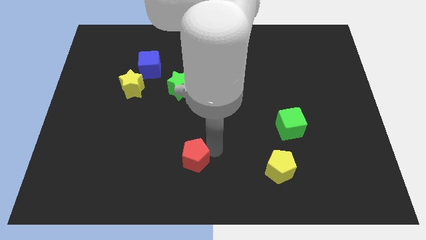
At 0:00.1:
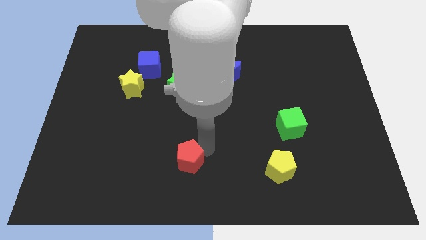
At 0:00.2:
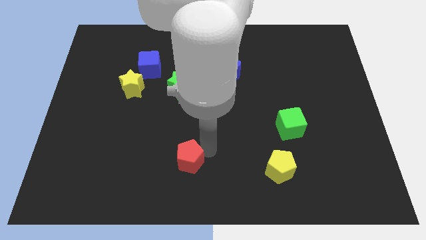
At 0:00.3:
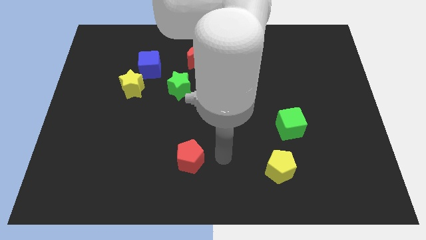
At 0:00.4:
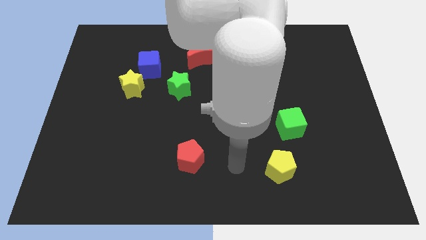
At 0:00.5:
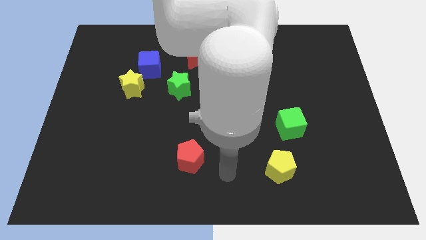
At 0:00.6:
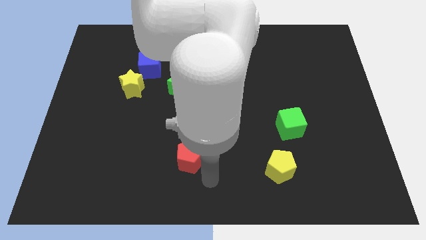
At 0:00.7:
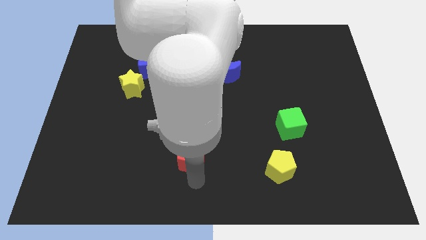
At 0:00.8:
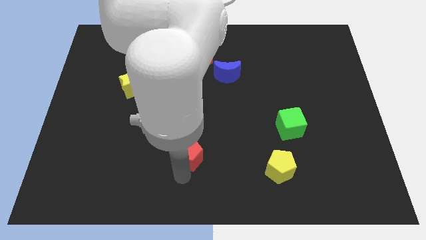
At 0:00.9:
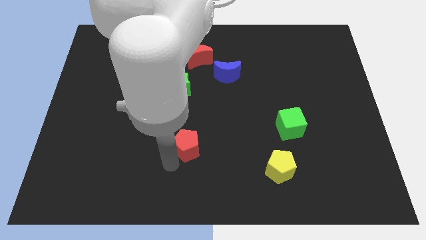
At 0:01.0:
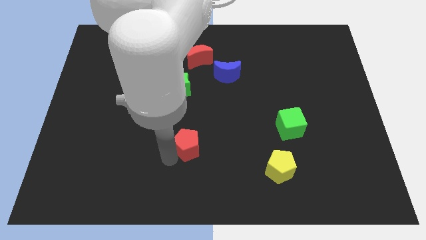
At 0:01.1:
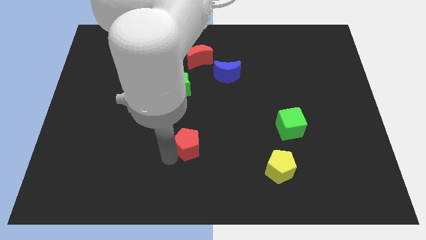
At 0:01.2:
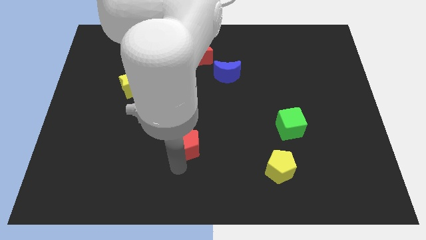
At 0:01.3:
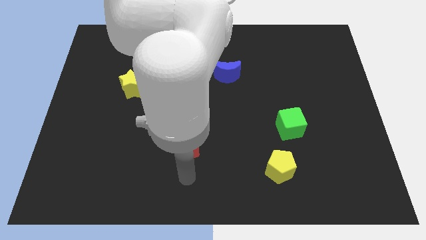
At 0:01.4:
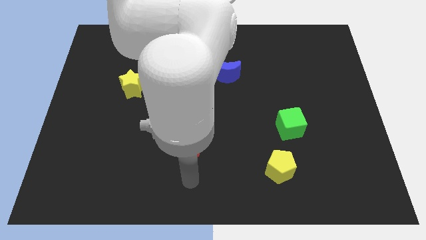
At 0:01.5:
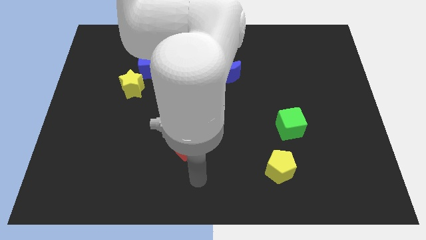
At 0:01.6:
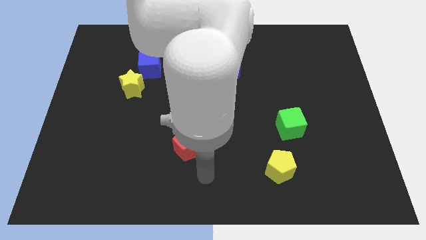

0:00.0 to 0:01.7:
push the red pentagon slightly up

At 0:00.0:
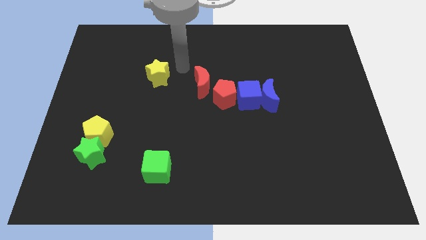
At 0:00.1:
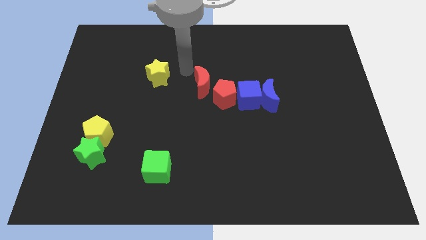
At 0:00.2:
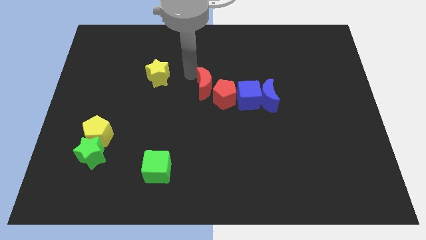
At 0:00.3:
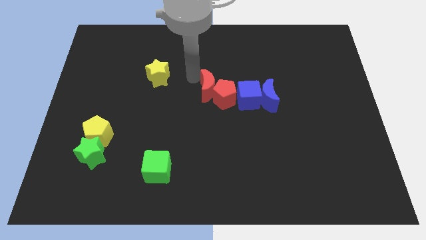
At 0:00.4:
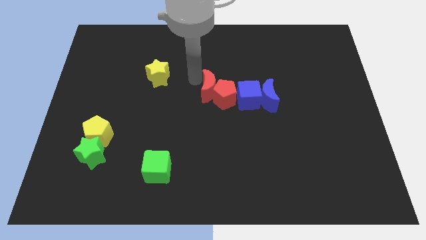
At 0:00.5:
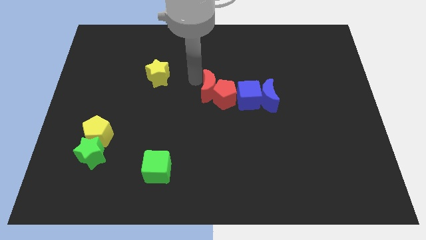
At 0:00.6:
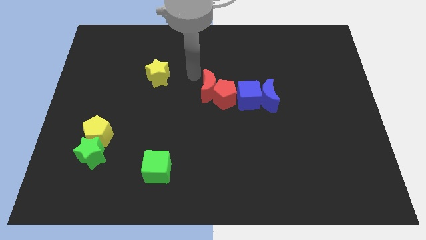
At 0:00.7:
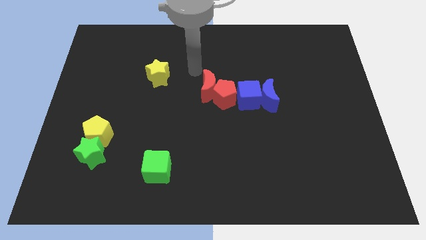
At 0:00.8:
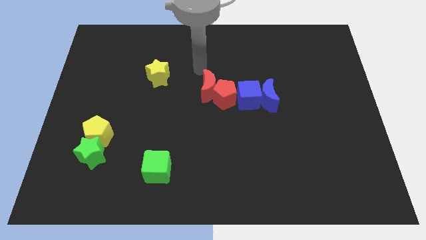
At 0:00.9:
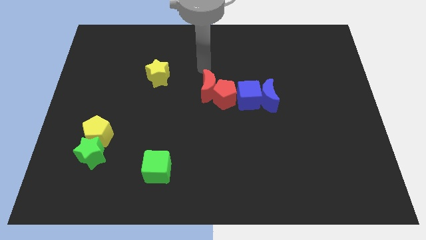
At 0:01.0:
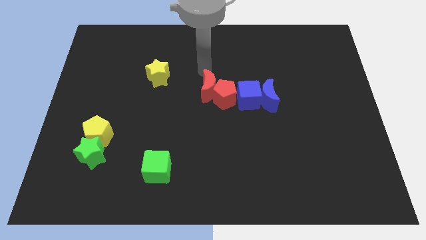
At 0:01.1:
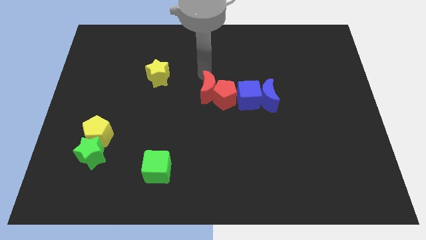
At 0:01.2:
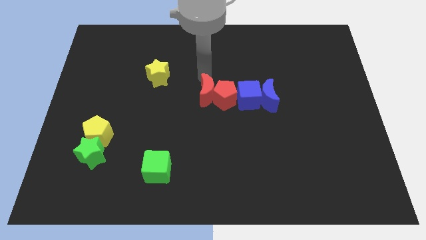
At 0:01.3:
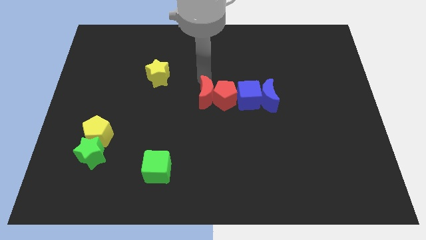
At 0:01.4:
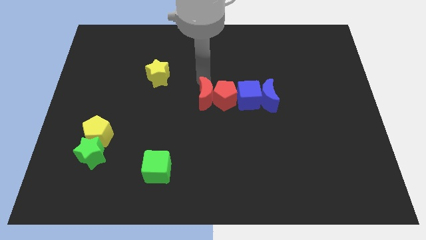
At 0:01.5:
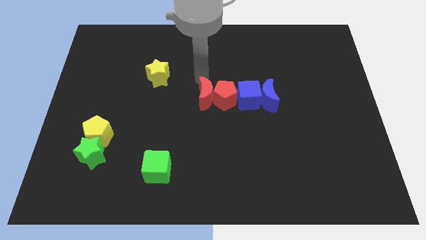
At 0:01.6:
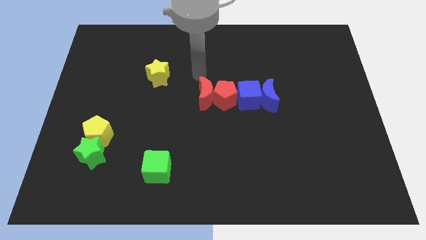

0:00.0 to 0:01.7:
make a horizontal line out of blue and the red blocks

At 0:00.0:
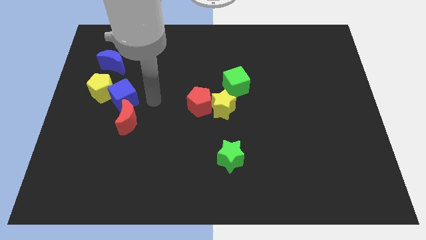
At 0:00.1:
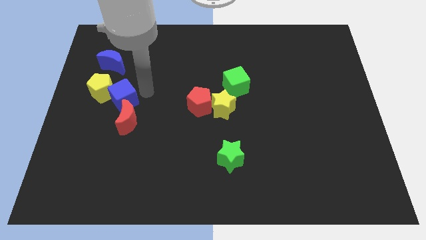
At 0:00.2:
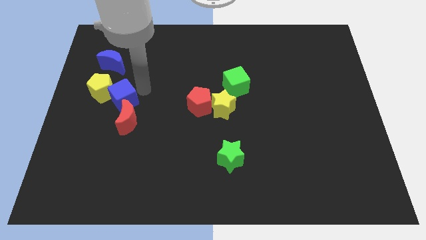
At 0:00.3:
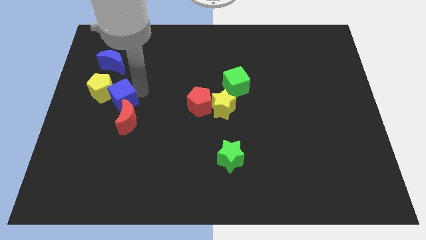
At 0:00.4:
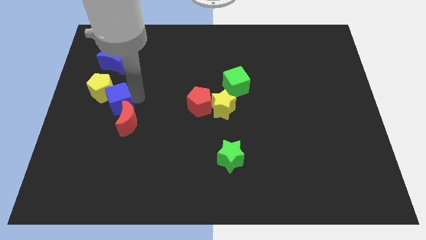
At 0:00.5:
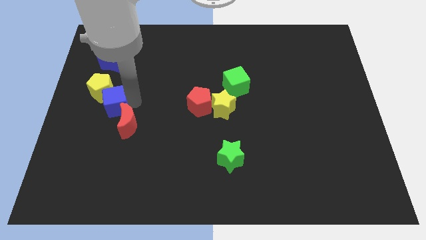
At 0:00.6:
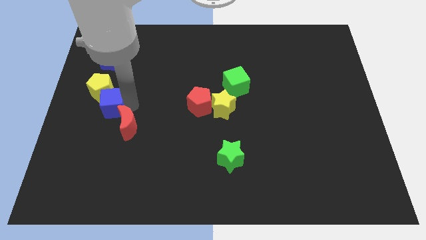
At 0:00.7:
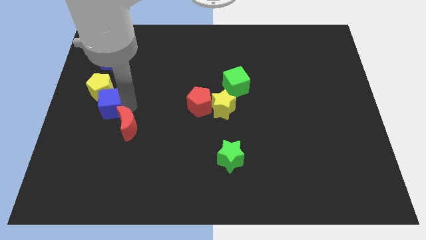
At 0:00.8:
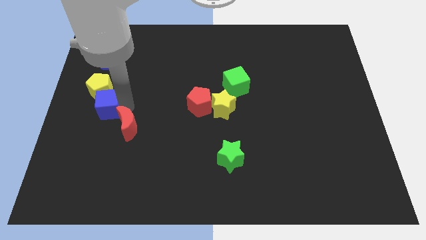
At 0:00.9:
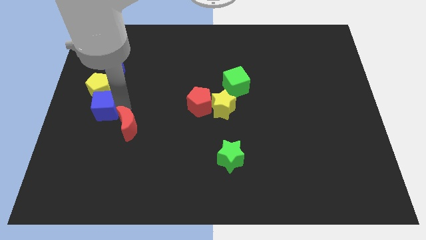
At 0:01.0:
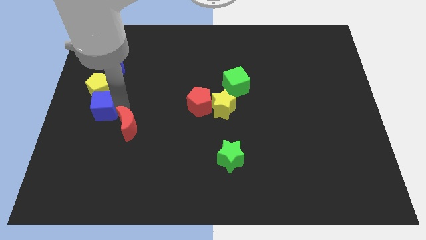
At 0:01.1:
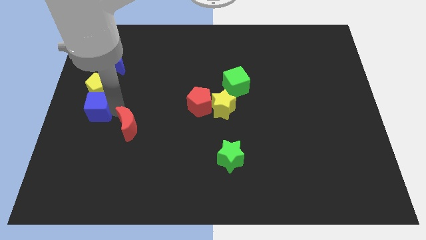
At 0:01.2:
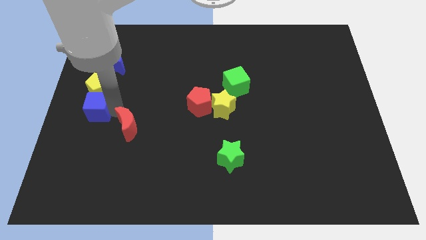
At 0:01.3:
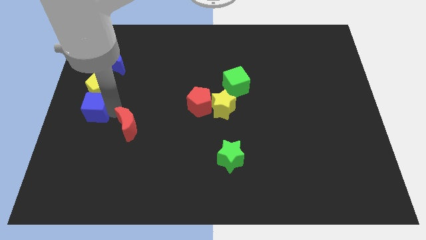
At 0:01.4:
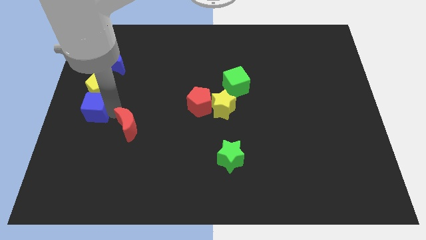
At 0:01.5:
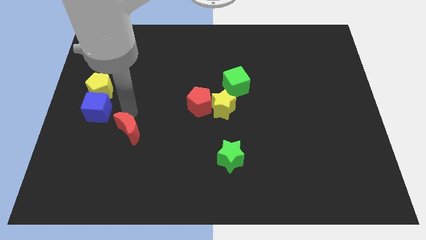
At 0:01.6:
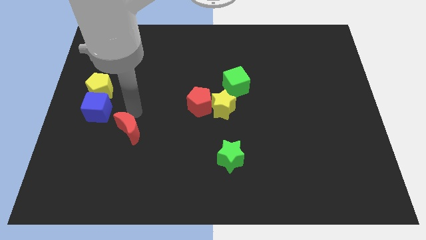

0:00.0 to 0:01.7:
move the blue cube towards the bottom of the yellow pentagon

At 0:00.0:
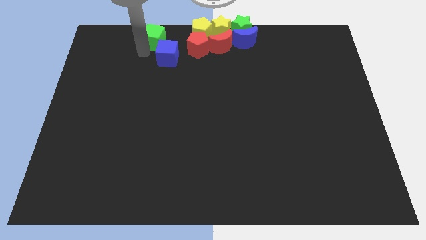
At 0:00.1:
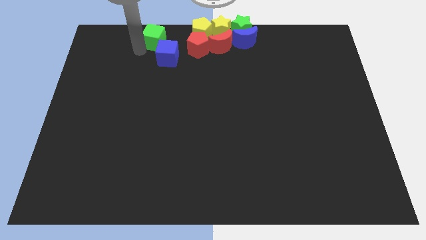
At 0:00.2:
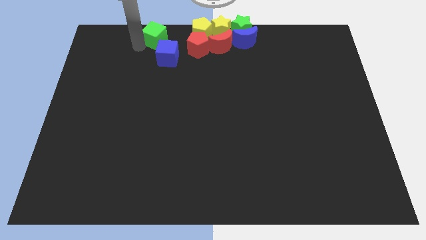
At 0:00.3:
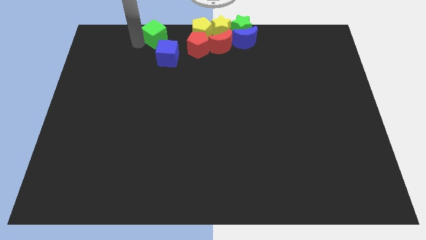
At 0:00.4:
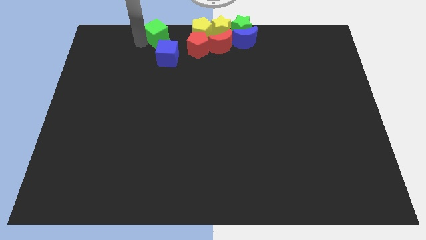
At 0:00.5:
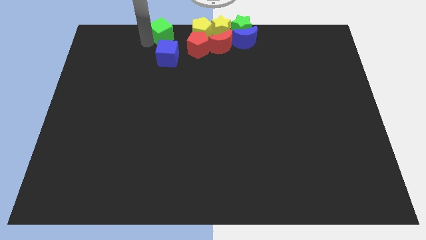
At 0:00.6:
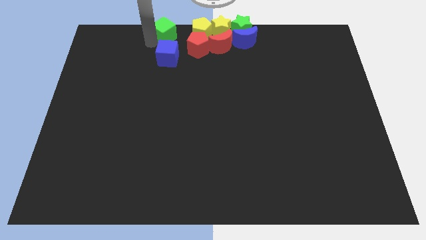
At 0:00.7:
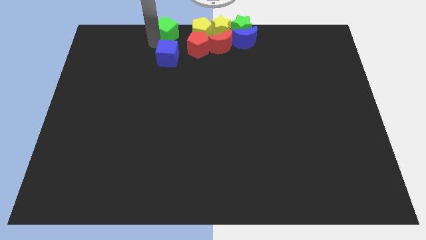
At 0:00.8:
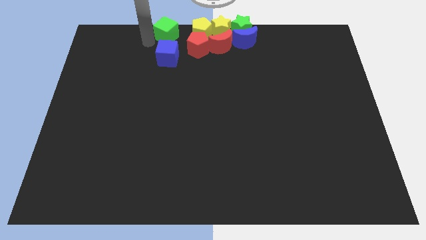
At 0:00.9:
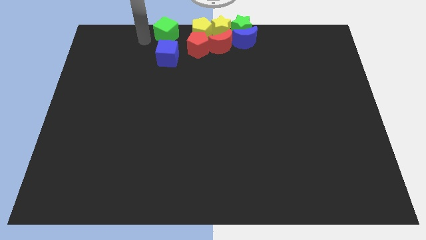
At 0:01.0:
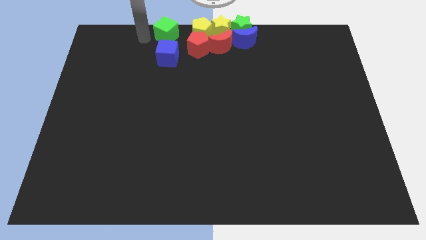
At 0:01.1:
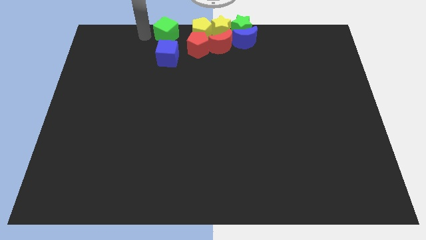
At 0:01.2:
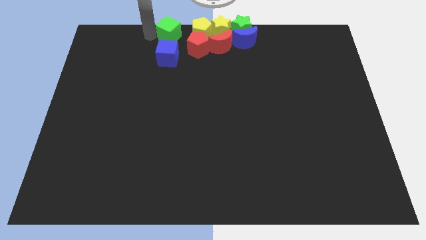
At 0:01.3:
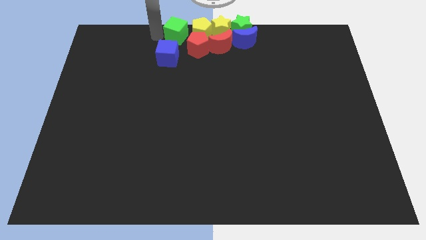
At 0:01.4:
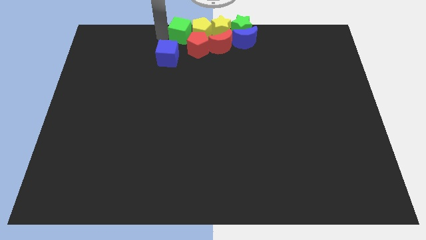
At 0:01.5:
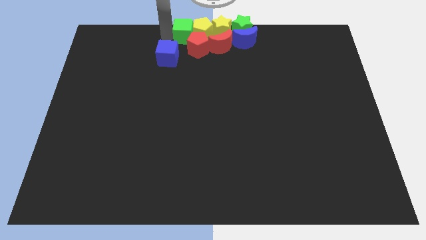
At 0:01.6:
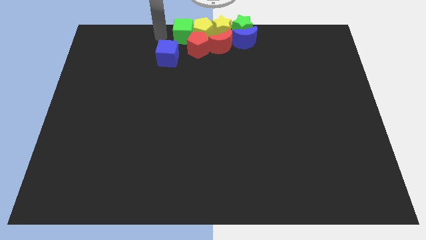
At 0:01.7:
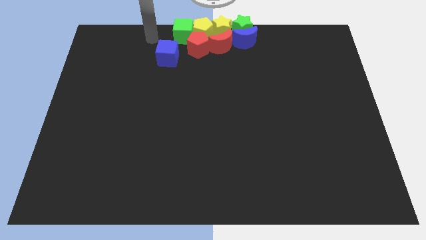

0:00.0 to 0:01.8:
push the green cube into the left side of the yellow pentagon

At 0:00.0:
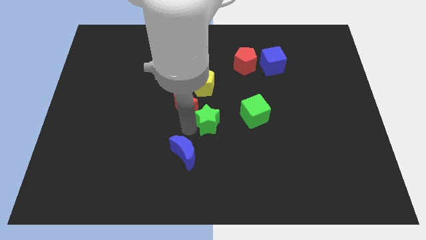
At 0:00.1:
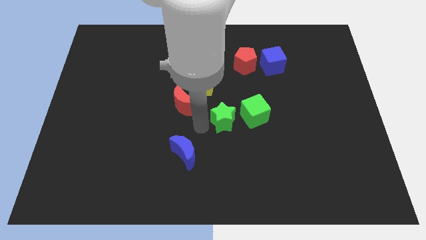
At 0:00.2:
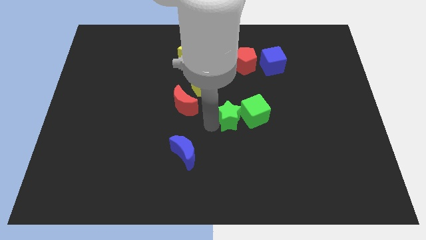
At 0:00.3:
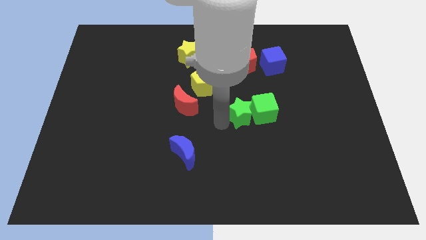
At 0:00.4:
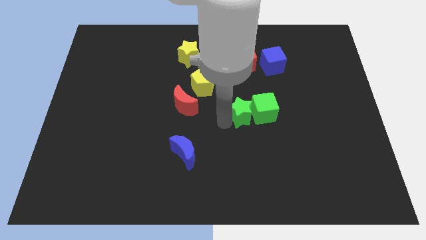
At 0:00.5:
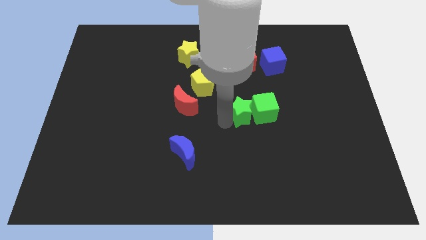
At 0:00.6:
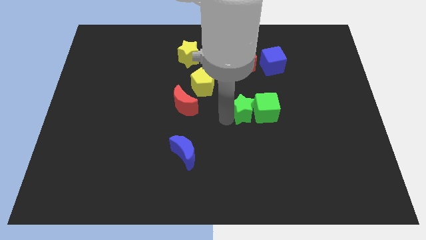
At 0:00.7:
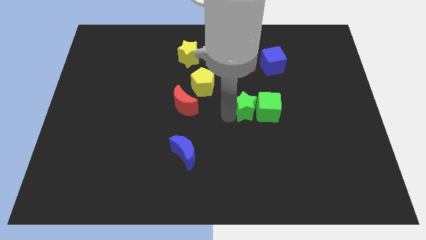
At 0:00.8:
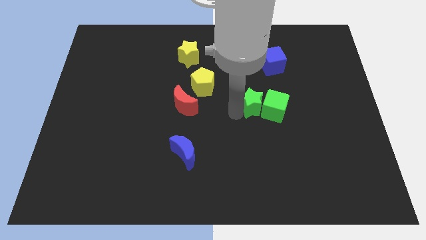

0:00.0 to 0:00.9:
push the green blocks towards the right side of the board

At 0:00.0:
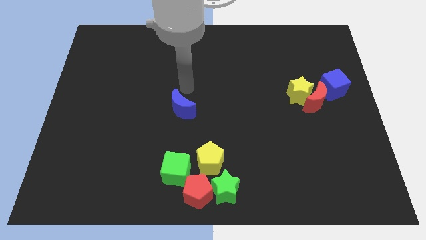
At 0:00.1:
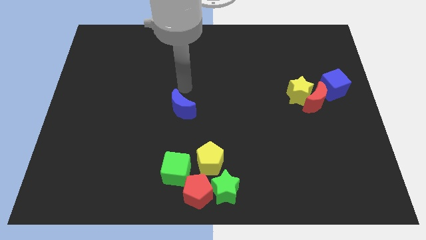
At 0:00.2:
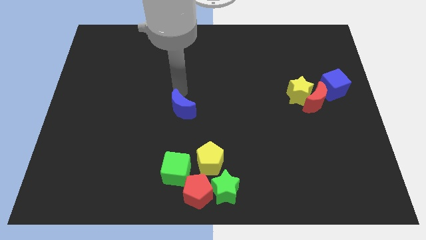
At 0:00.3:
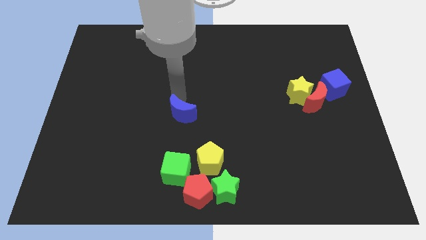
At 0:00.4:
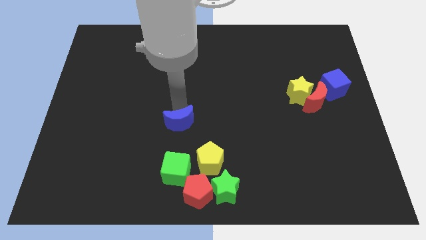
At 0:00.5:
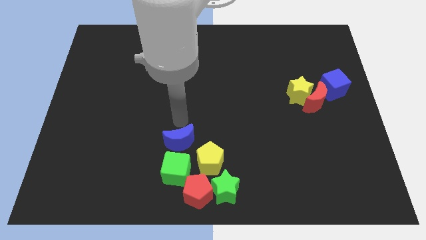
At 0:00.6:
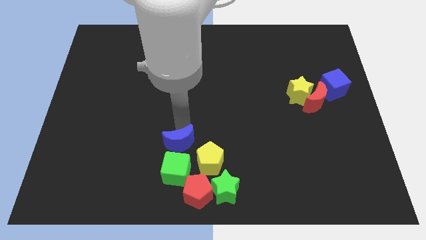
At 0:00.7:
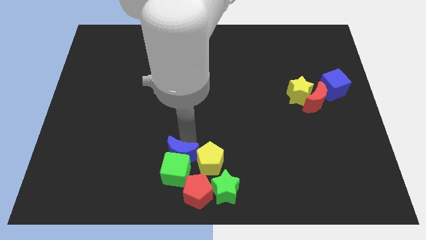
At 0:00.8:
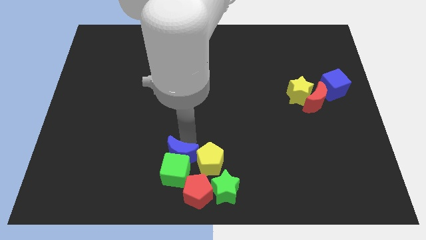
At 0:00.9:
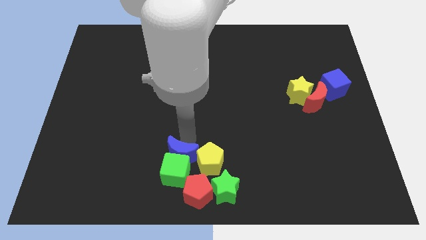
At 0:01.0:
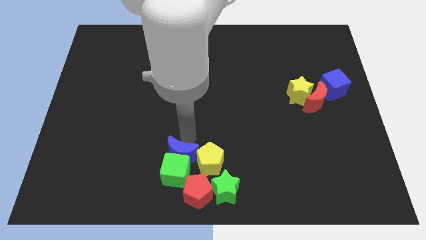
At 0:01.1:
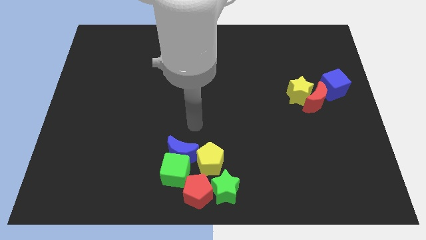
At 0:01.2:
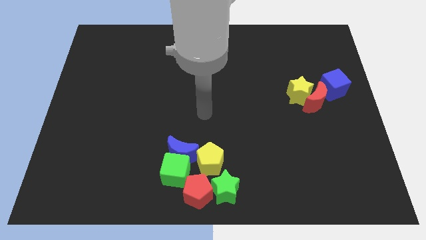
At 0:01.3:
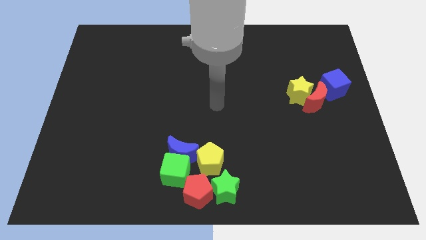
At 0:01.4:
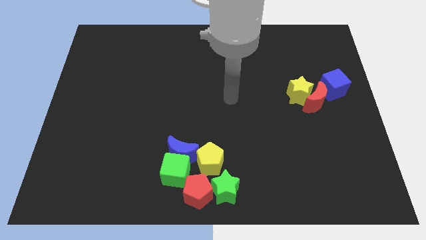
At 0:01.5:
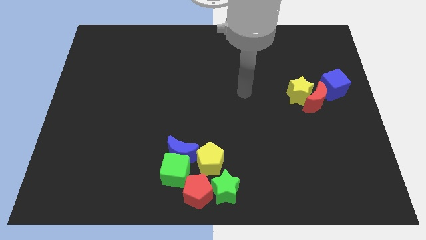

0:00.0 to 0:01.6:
push the blue moon into the green cube
